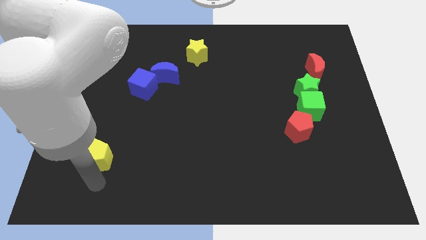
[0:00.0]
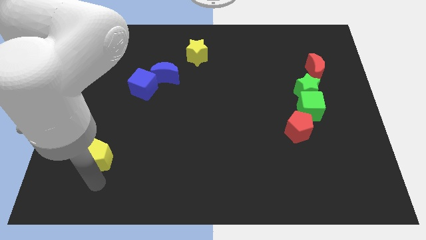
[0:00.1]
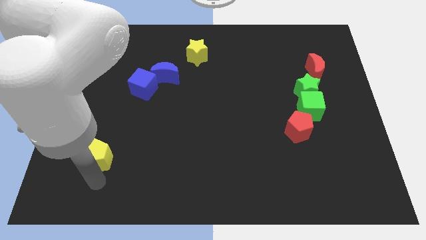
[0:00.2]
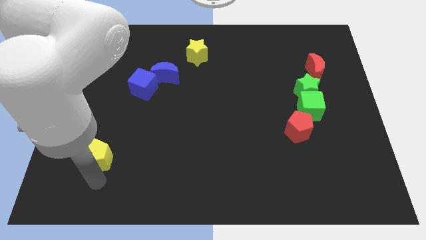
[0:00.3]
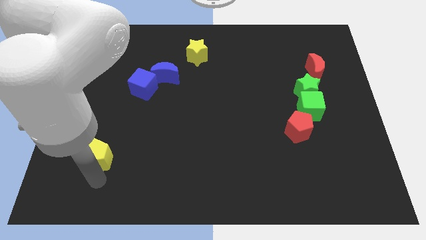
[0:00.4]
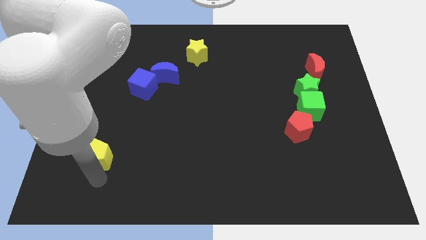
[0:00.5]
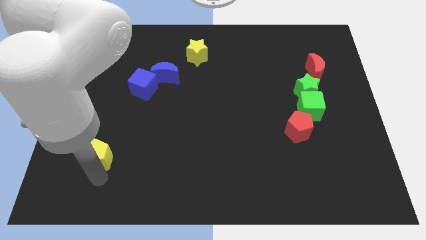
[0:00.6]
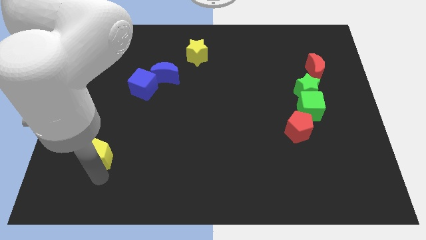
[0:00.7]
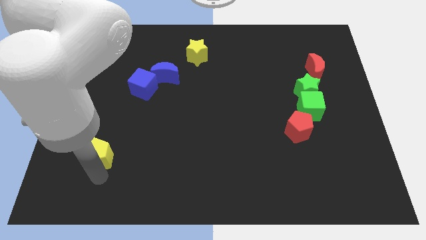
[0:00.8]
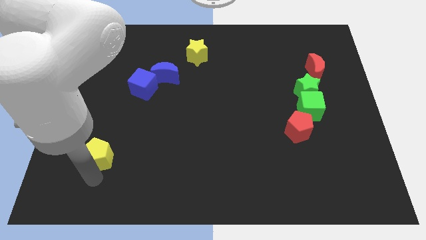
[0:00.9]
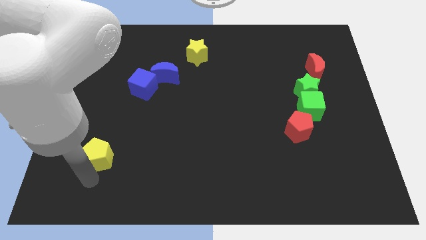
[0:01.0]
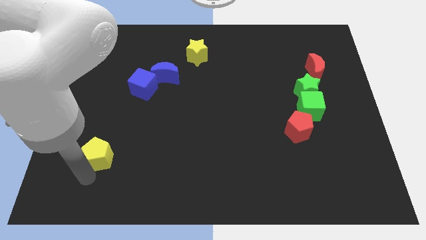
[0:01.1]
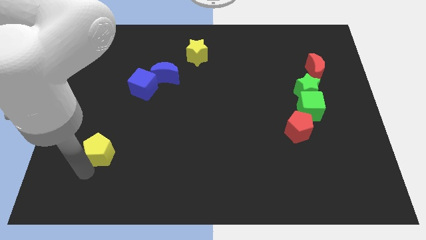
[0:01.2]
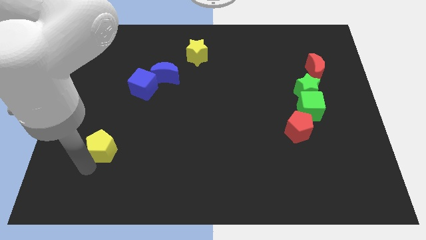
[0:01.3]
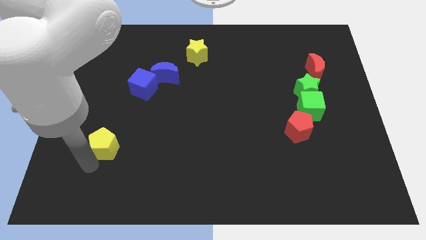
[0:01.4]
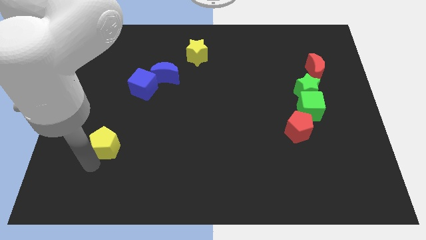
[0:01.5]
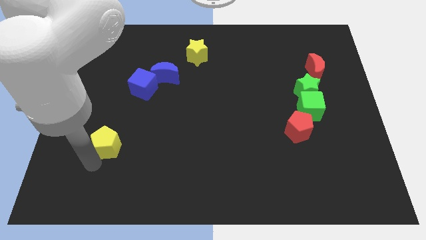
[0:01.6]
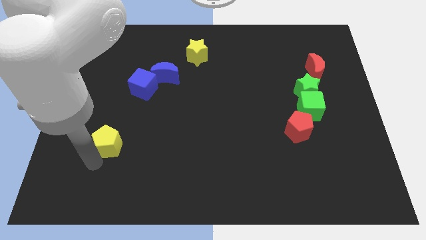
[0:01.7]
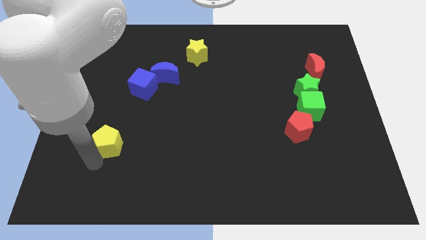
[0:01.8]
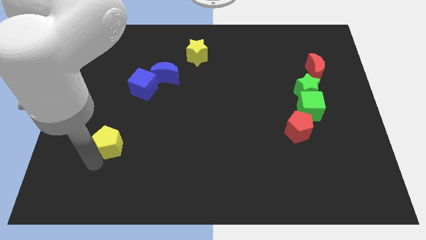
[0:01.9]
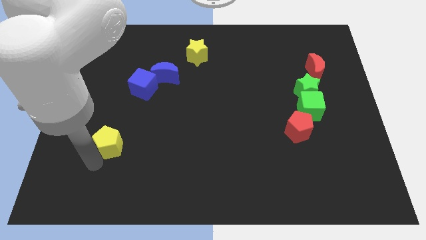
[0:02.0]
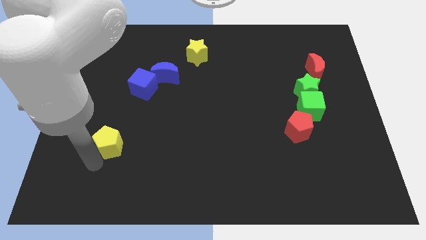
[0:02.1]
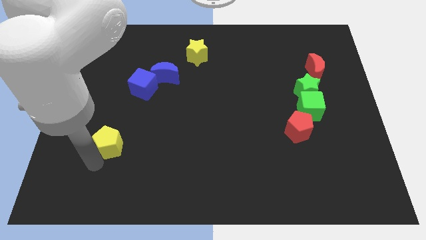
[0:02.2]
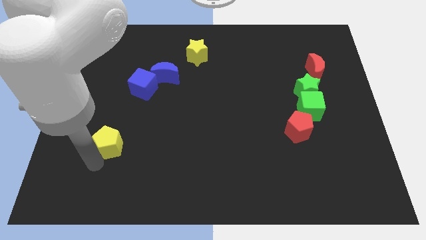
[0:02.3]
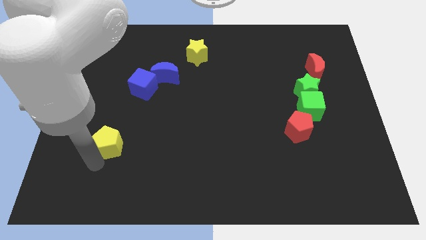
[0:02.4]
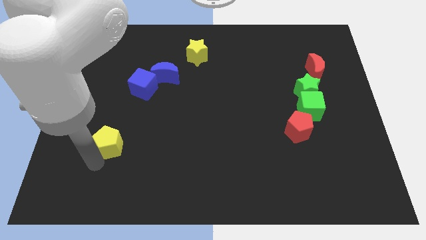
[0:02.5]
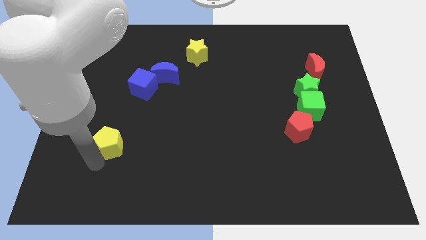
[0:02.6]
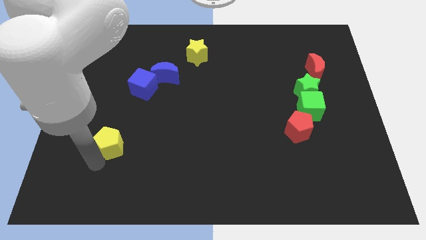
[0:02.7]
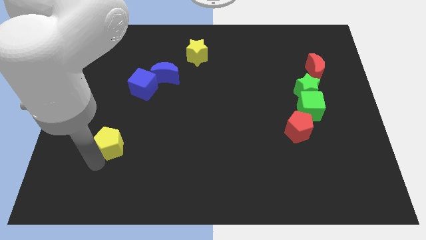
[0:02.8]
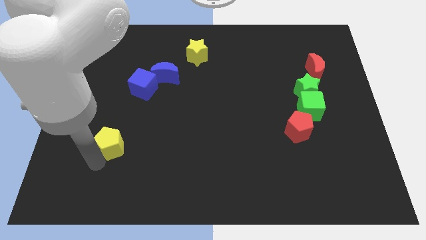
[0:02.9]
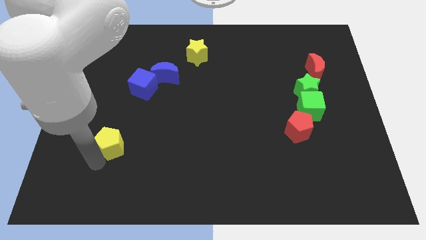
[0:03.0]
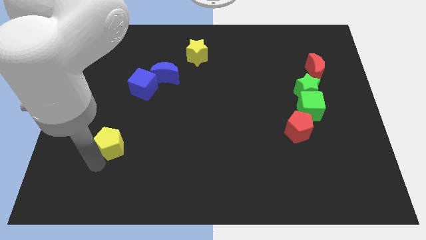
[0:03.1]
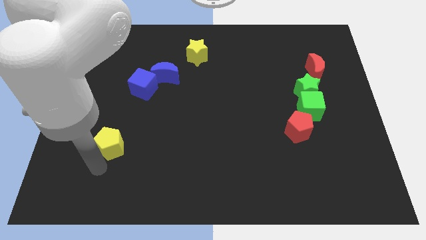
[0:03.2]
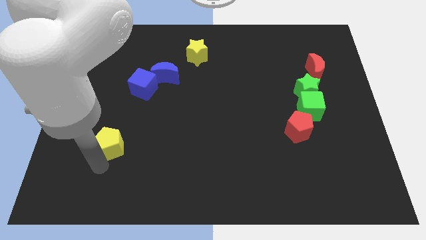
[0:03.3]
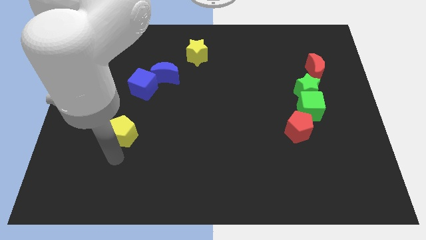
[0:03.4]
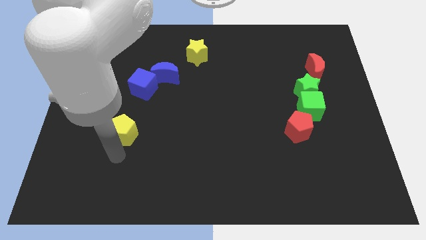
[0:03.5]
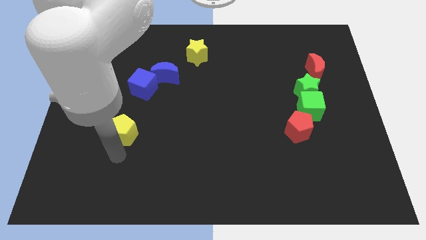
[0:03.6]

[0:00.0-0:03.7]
push the yellow pentagon towards the blue cube

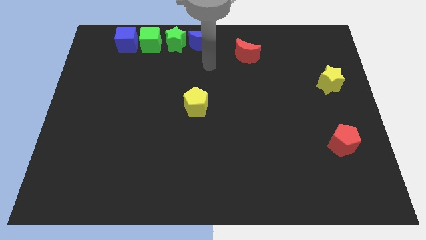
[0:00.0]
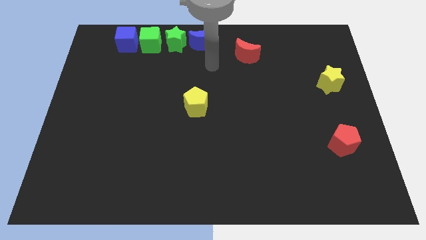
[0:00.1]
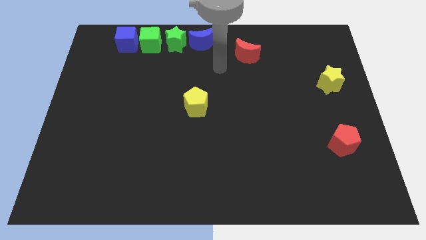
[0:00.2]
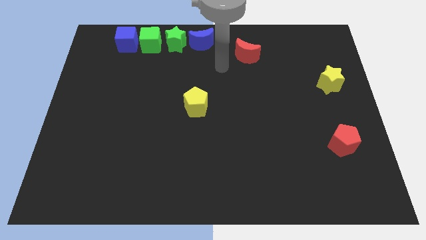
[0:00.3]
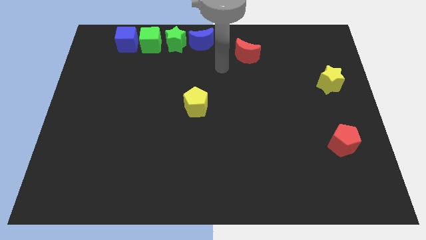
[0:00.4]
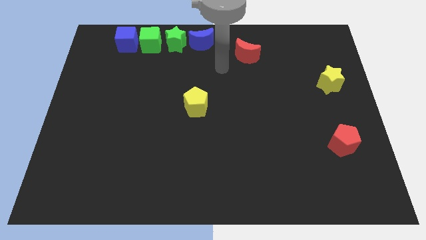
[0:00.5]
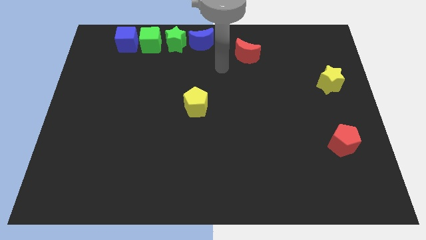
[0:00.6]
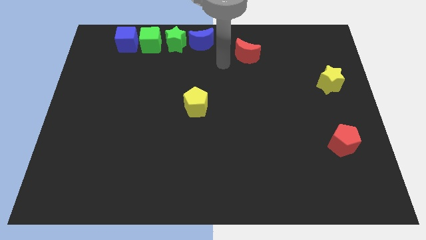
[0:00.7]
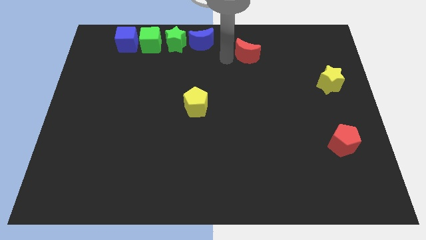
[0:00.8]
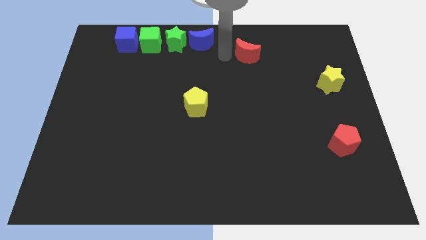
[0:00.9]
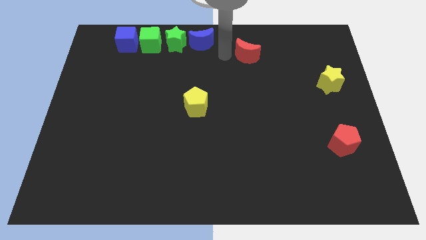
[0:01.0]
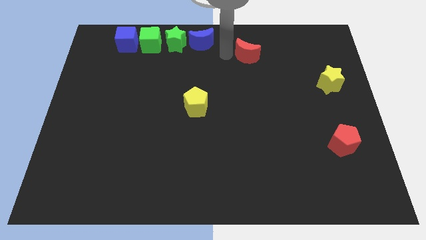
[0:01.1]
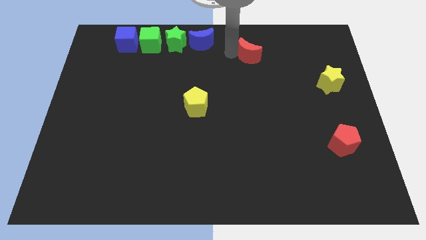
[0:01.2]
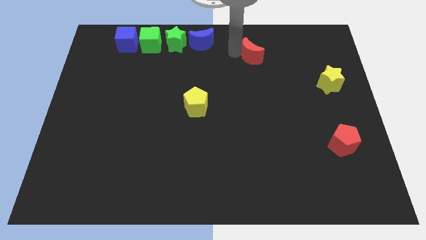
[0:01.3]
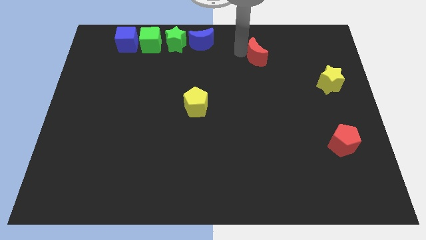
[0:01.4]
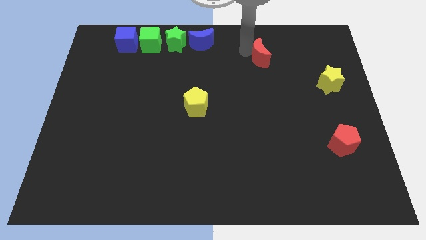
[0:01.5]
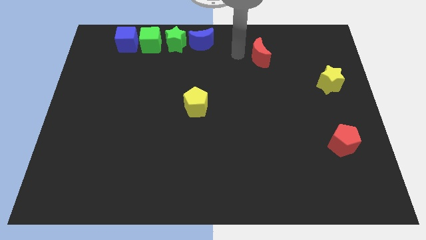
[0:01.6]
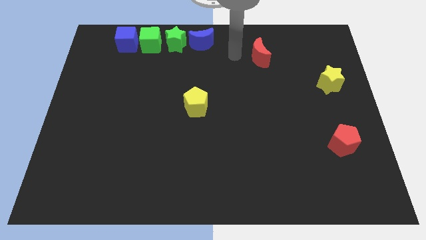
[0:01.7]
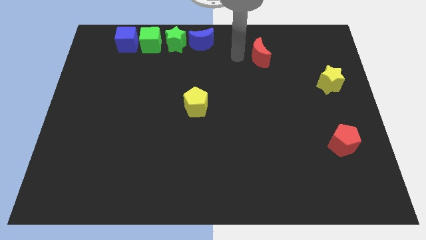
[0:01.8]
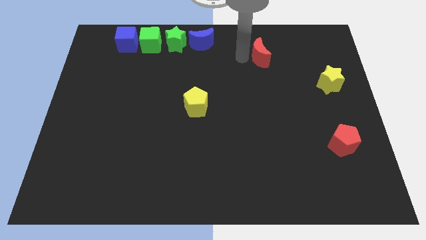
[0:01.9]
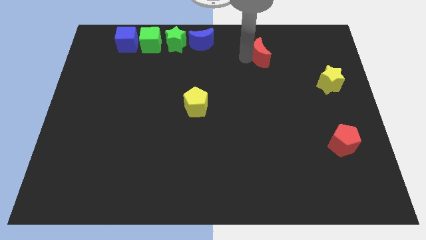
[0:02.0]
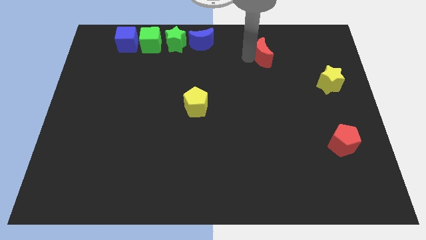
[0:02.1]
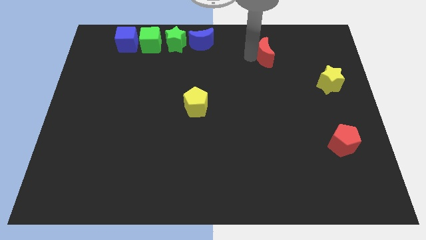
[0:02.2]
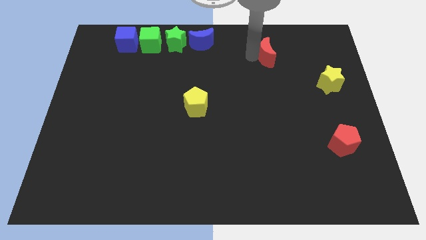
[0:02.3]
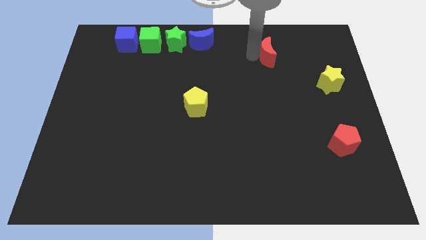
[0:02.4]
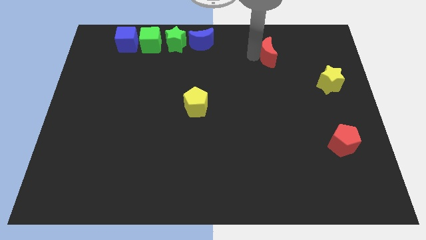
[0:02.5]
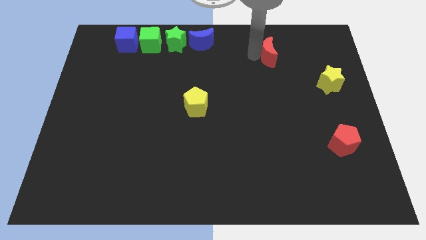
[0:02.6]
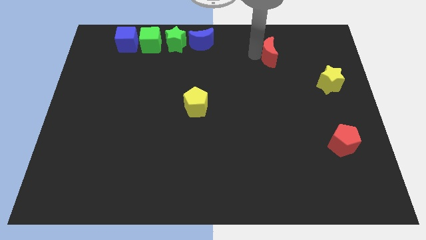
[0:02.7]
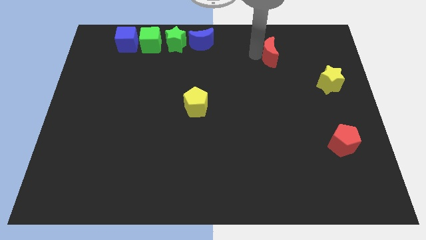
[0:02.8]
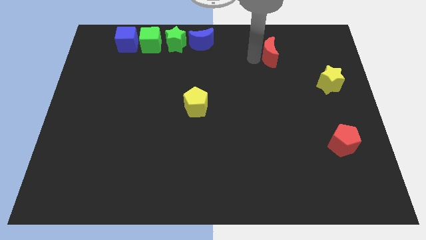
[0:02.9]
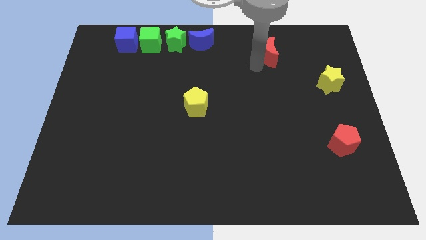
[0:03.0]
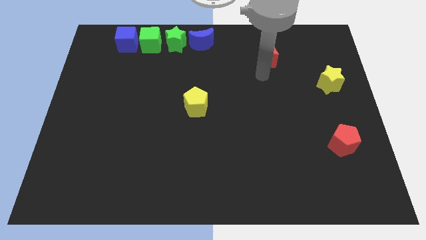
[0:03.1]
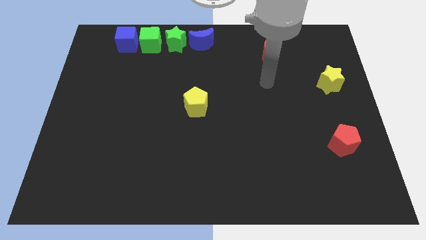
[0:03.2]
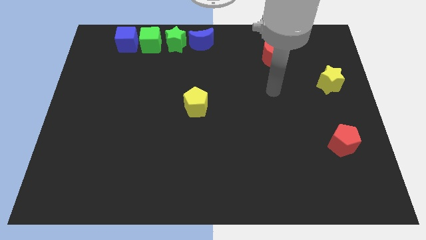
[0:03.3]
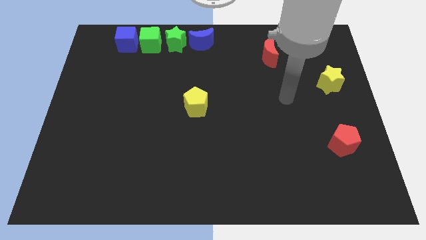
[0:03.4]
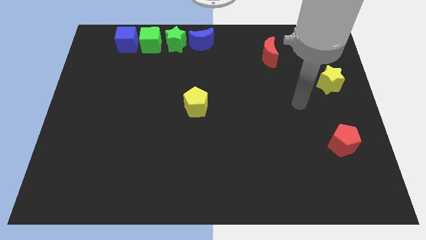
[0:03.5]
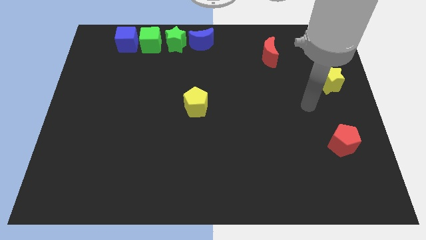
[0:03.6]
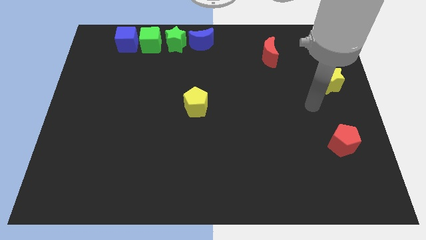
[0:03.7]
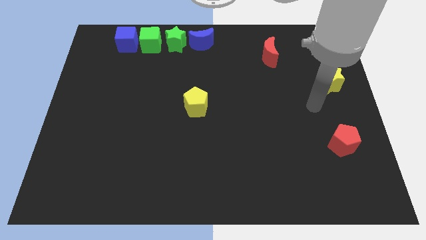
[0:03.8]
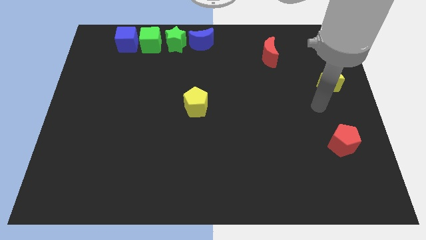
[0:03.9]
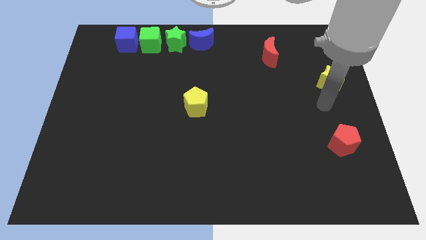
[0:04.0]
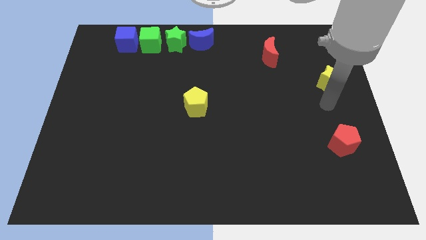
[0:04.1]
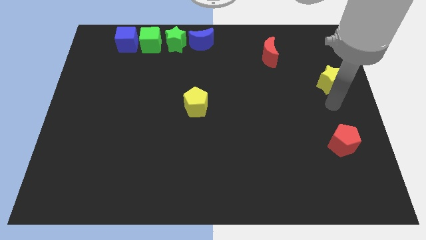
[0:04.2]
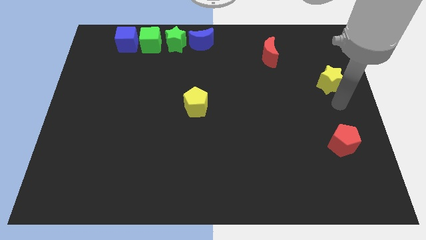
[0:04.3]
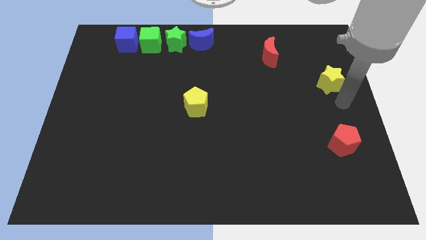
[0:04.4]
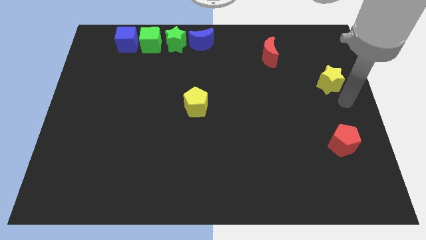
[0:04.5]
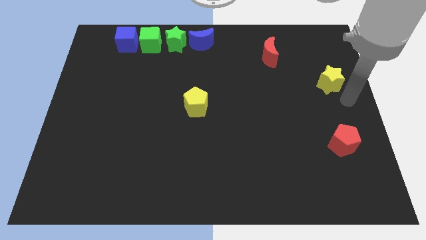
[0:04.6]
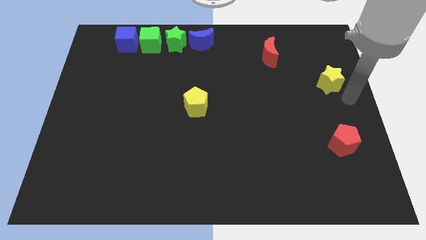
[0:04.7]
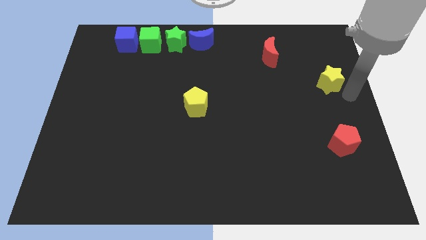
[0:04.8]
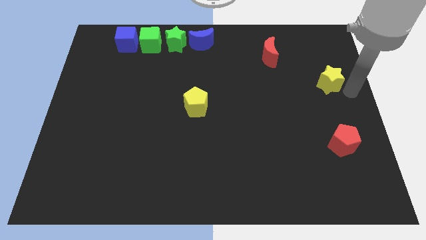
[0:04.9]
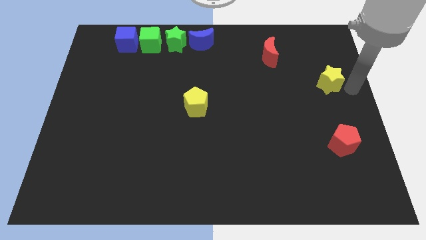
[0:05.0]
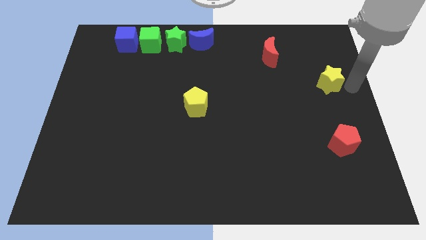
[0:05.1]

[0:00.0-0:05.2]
slightly push the red crescent to the right of the board

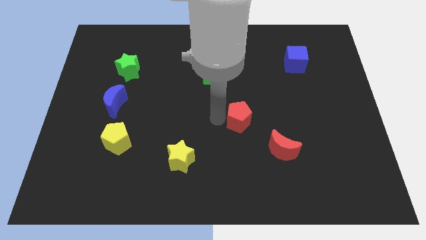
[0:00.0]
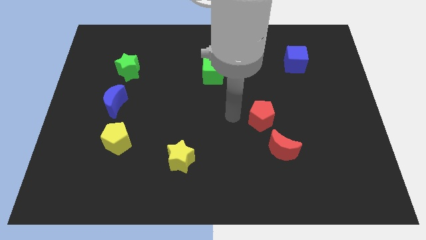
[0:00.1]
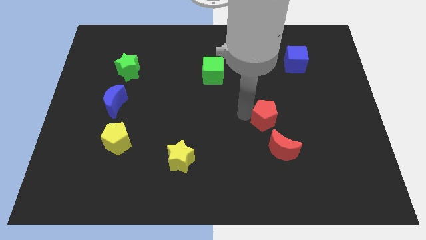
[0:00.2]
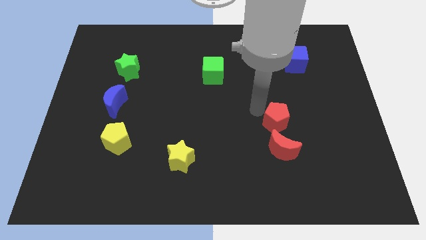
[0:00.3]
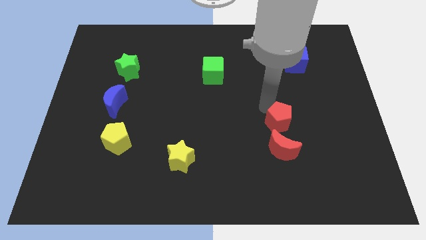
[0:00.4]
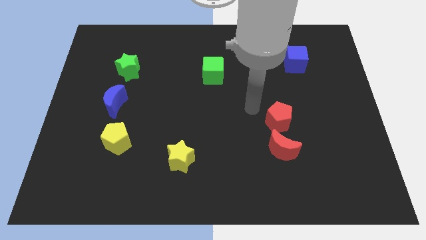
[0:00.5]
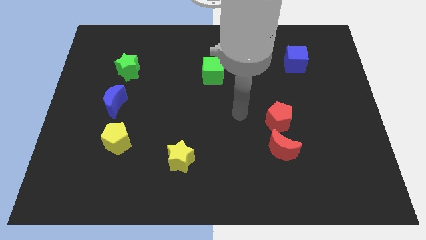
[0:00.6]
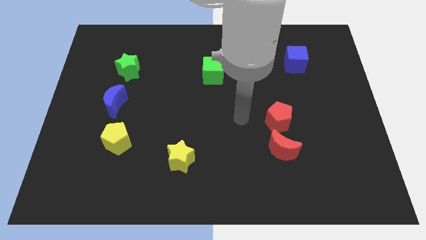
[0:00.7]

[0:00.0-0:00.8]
place the red pentagon above the red crescent
